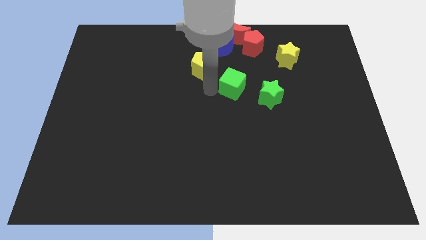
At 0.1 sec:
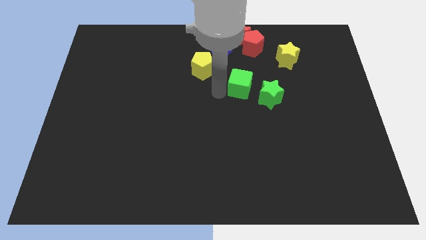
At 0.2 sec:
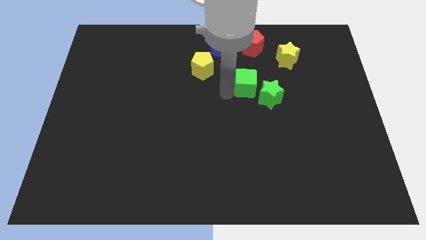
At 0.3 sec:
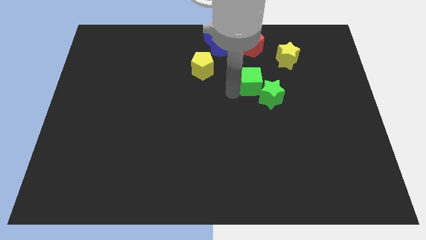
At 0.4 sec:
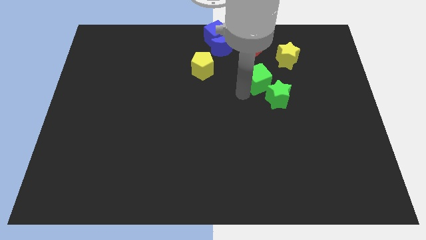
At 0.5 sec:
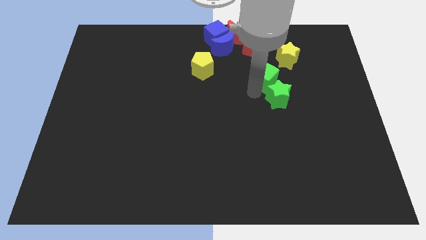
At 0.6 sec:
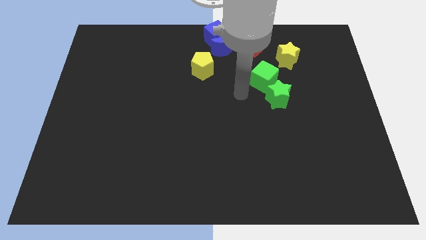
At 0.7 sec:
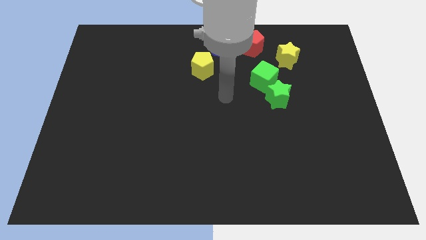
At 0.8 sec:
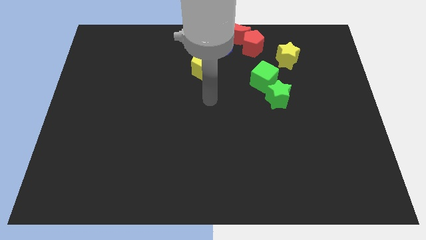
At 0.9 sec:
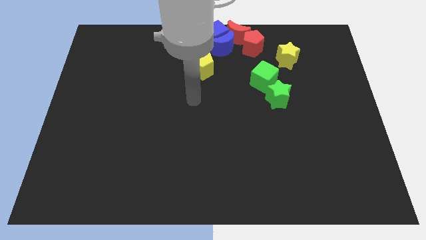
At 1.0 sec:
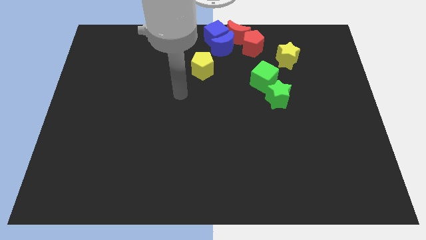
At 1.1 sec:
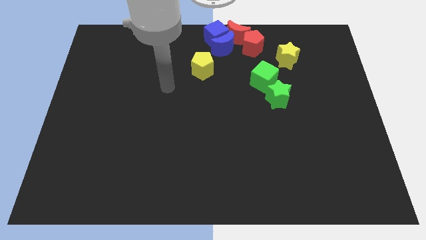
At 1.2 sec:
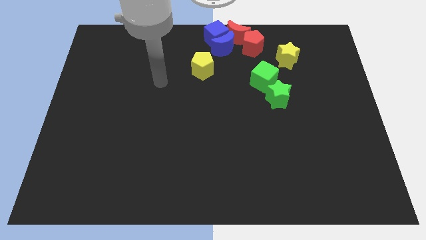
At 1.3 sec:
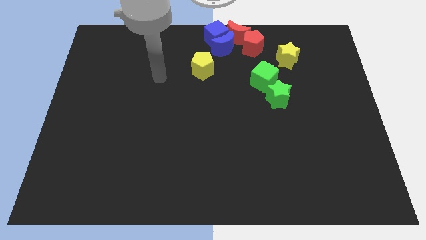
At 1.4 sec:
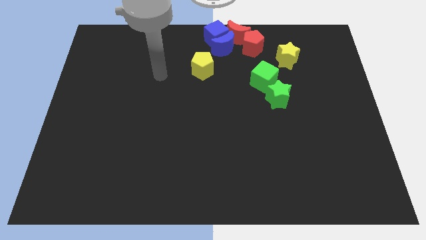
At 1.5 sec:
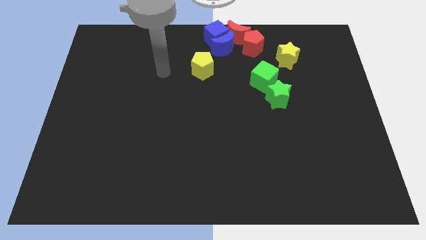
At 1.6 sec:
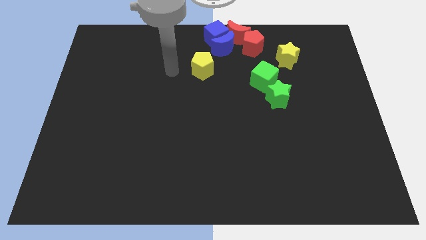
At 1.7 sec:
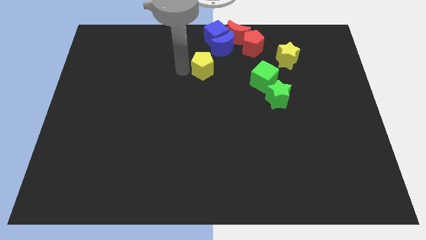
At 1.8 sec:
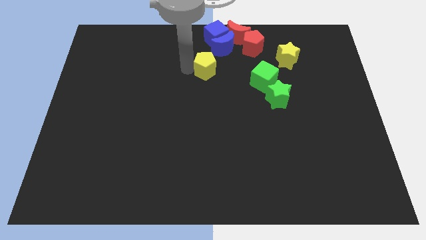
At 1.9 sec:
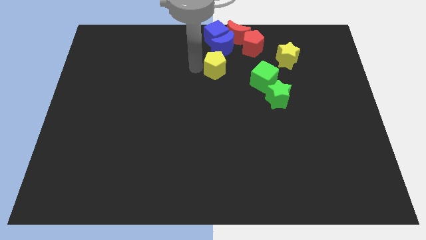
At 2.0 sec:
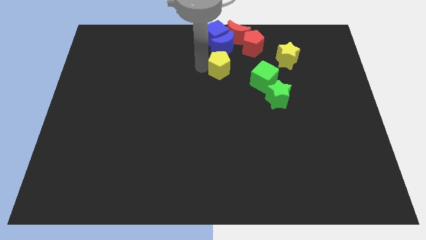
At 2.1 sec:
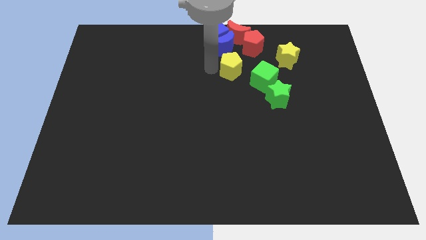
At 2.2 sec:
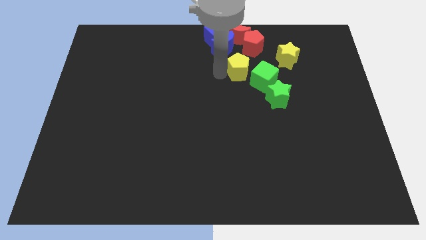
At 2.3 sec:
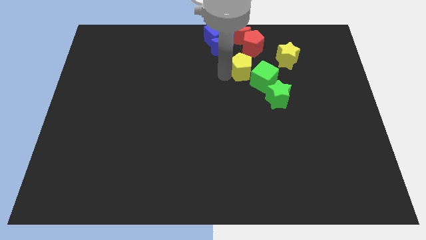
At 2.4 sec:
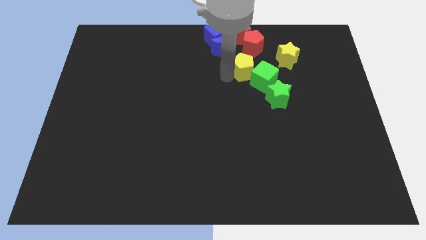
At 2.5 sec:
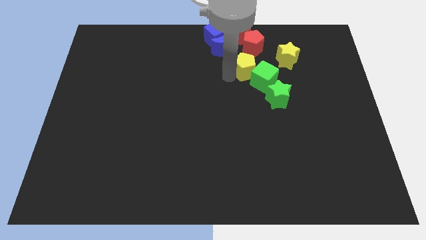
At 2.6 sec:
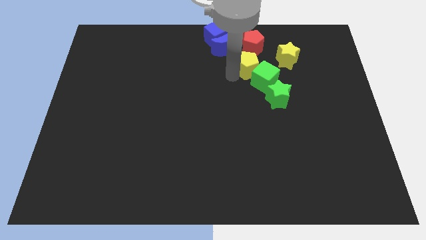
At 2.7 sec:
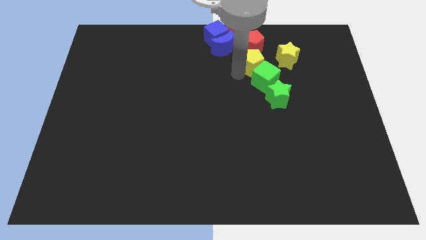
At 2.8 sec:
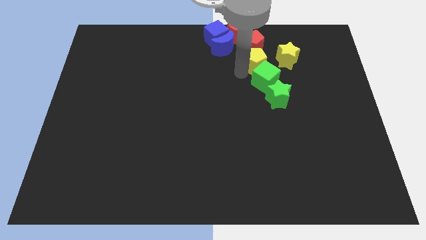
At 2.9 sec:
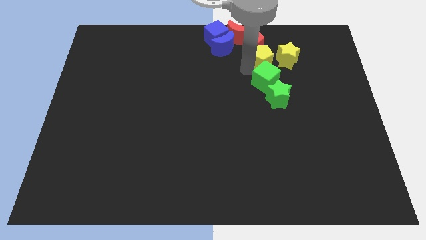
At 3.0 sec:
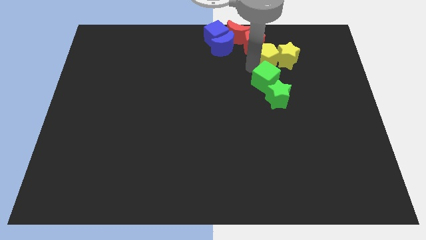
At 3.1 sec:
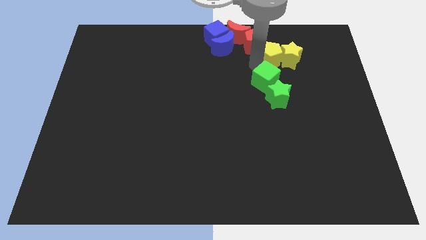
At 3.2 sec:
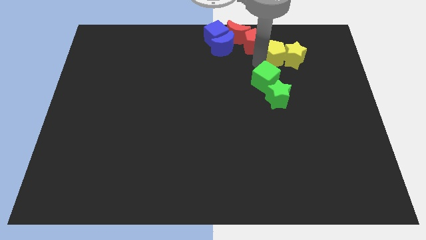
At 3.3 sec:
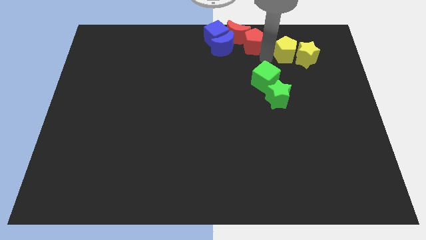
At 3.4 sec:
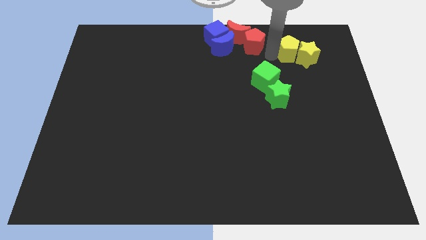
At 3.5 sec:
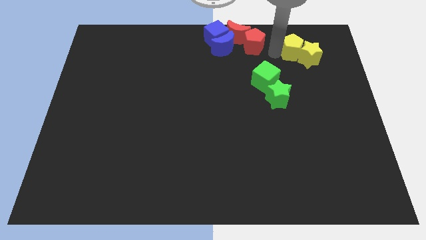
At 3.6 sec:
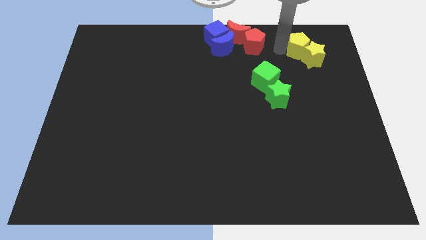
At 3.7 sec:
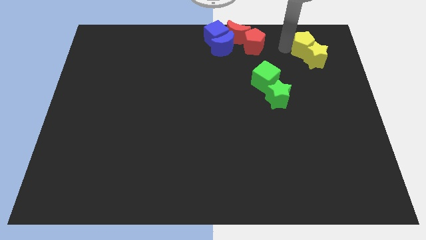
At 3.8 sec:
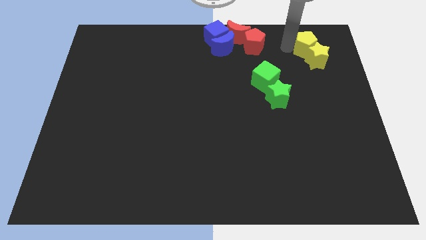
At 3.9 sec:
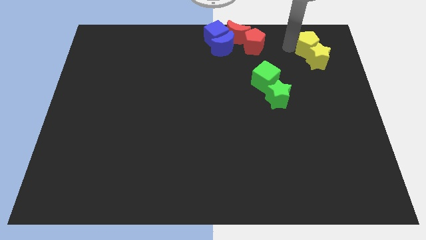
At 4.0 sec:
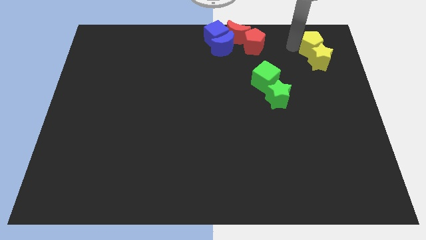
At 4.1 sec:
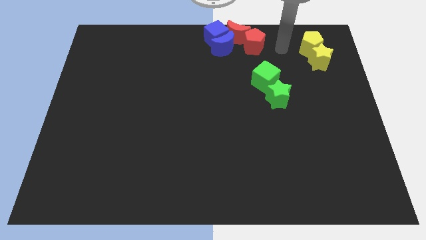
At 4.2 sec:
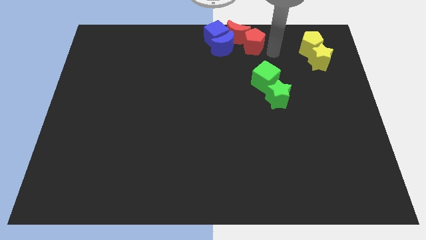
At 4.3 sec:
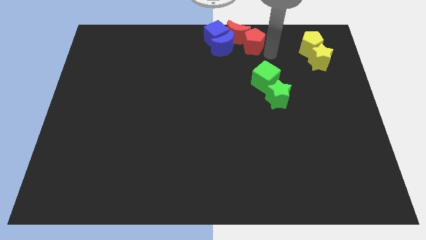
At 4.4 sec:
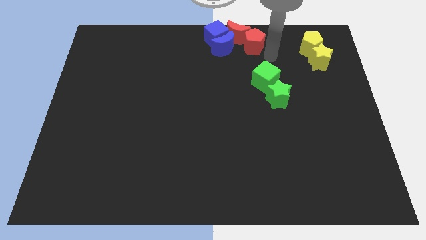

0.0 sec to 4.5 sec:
move the yellow pentagon above the yellow star

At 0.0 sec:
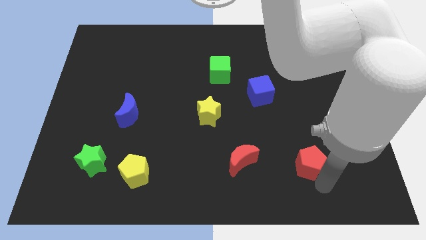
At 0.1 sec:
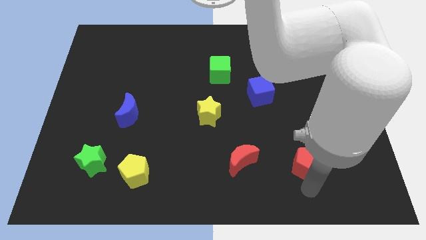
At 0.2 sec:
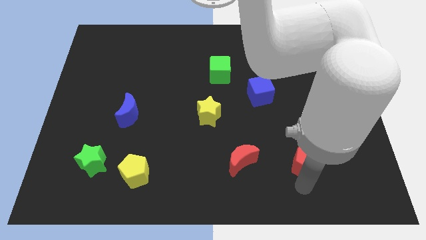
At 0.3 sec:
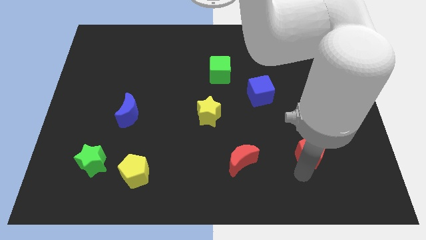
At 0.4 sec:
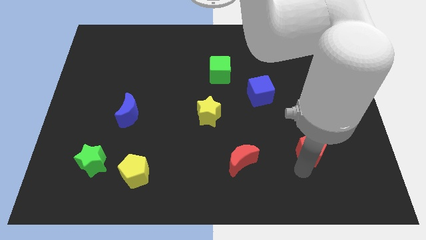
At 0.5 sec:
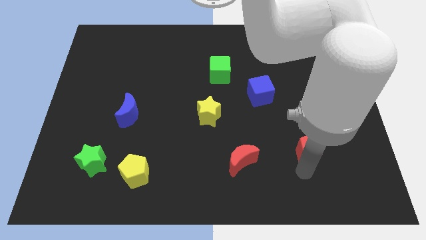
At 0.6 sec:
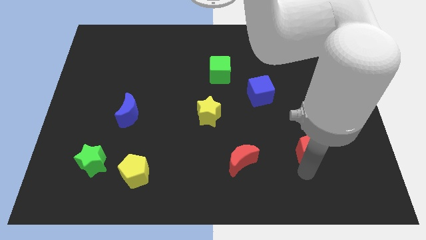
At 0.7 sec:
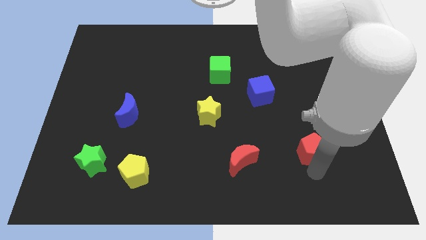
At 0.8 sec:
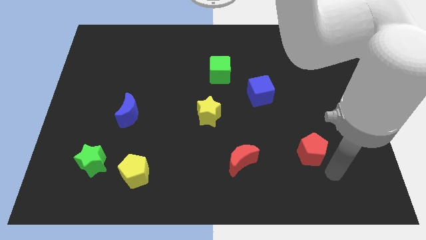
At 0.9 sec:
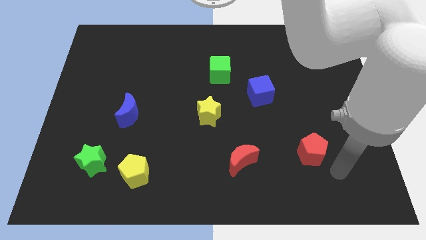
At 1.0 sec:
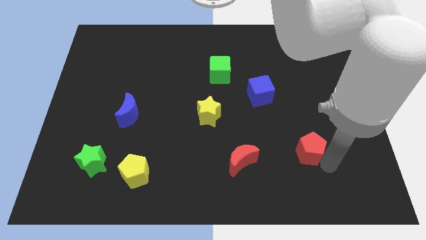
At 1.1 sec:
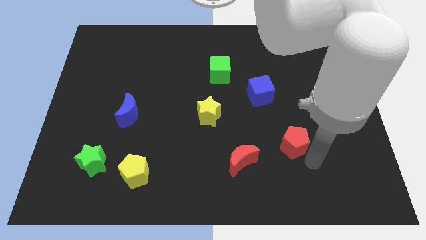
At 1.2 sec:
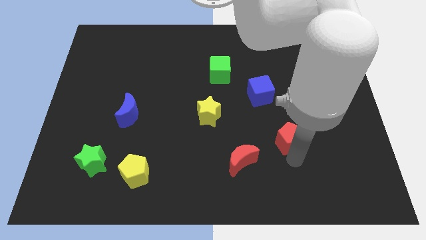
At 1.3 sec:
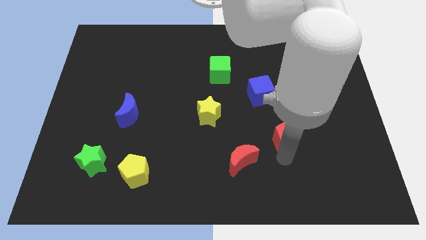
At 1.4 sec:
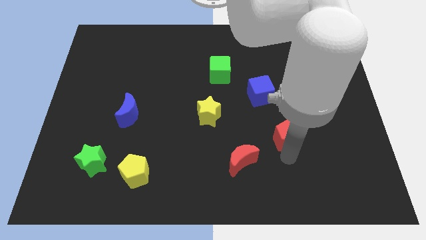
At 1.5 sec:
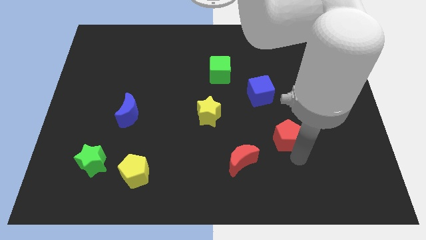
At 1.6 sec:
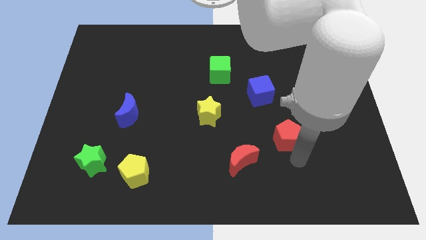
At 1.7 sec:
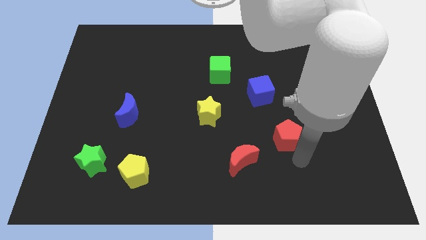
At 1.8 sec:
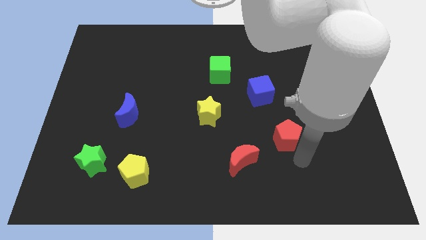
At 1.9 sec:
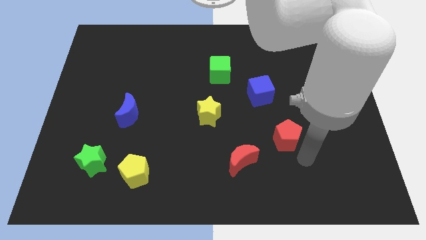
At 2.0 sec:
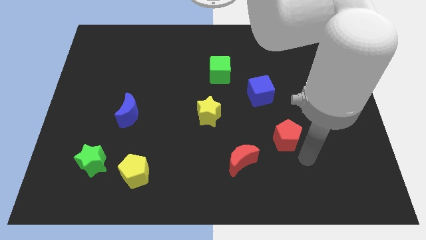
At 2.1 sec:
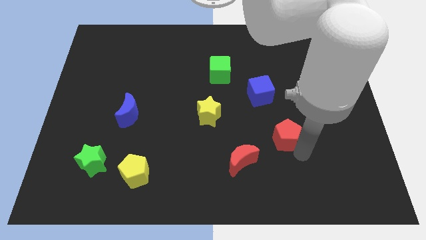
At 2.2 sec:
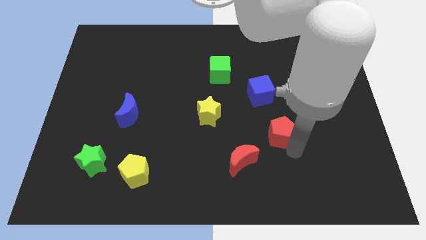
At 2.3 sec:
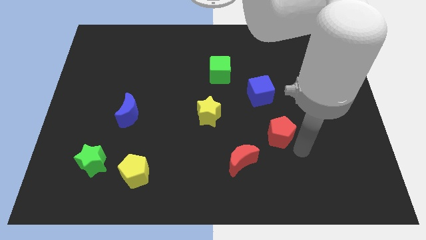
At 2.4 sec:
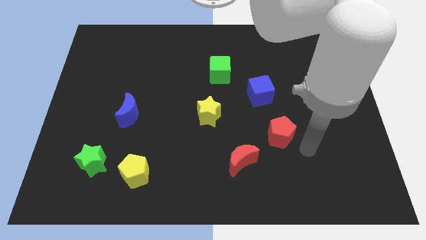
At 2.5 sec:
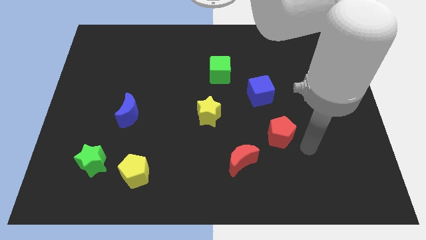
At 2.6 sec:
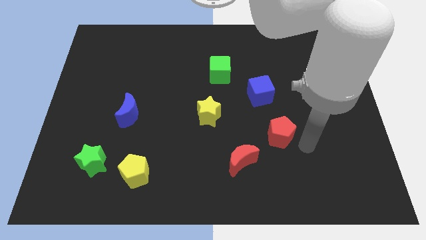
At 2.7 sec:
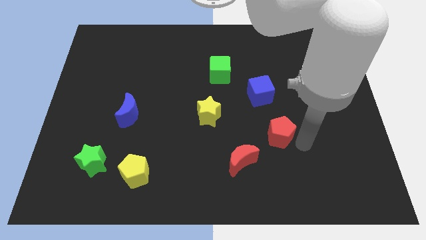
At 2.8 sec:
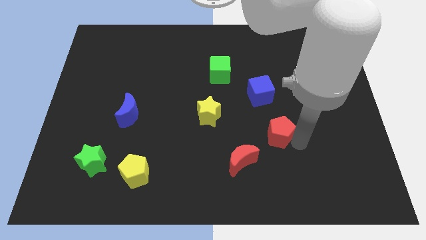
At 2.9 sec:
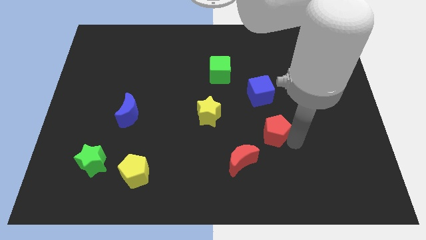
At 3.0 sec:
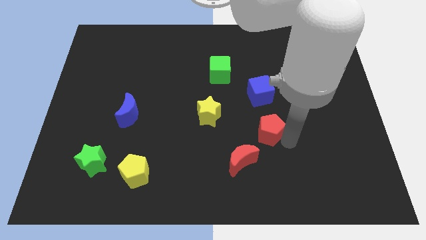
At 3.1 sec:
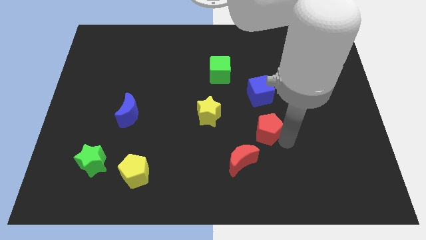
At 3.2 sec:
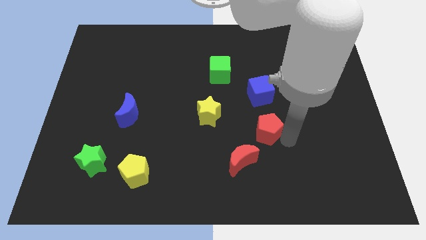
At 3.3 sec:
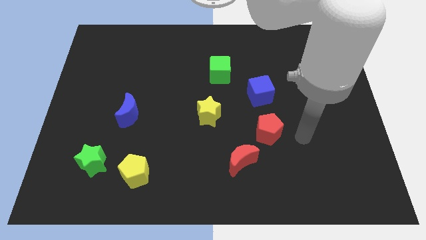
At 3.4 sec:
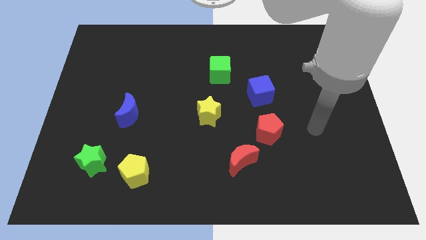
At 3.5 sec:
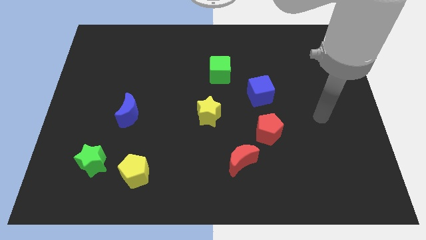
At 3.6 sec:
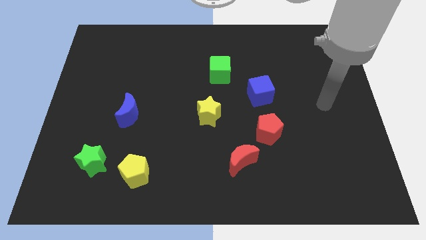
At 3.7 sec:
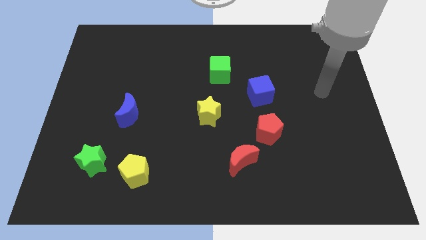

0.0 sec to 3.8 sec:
push red pentagon towards blue cube

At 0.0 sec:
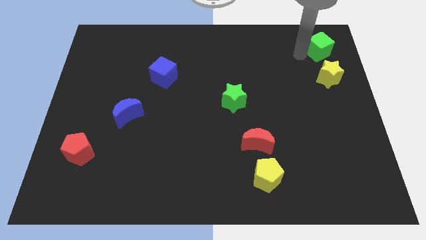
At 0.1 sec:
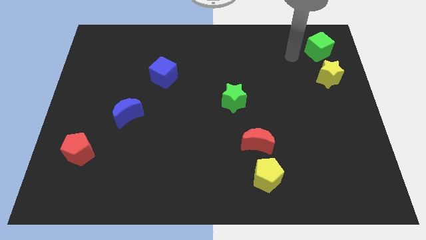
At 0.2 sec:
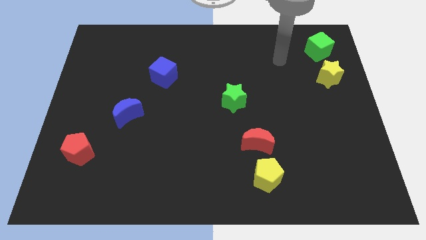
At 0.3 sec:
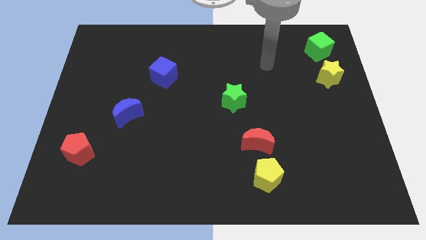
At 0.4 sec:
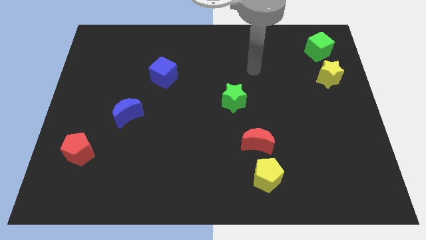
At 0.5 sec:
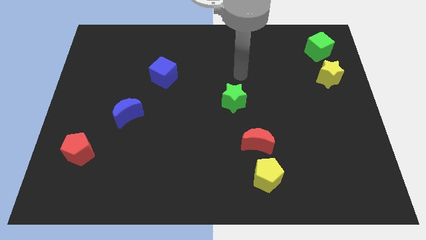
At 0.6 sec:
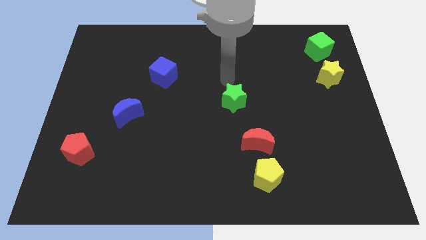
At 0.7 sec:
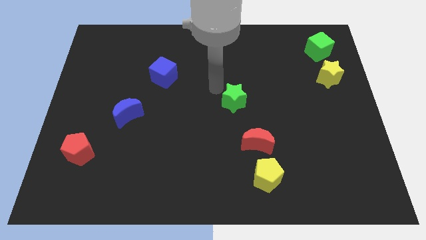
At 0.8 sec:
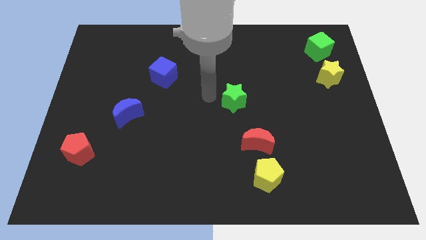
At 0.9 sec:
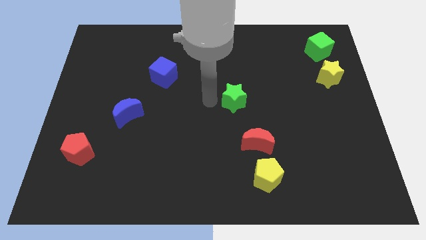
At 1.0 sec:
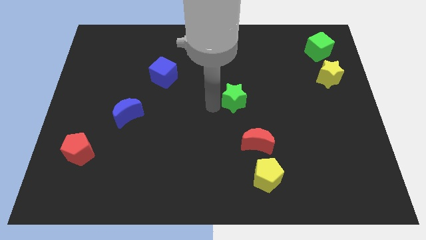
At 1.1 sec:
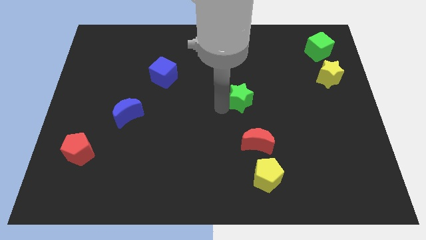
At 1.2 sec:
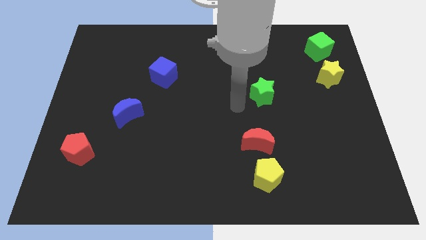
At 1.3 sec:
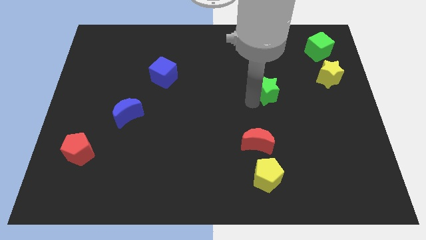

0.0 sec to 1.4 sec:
slightly push the green star to the top right of the board
